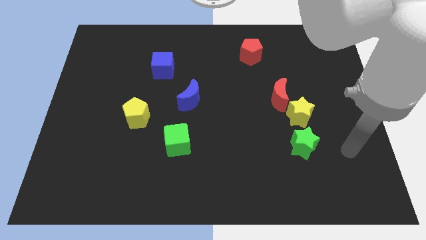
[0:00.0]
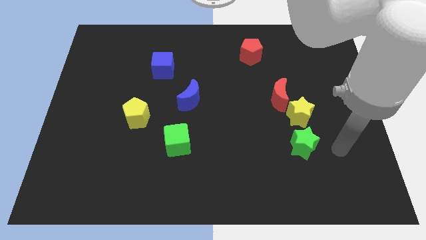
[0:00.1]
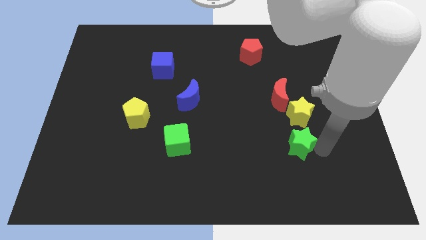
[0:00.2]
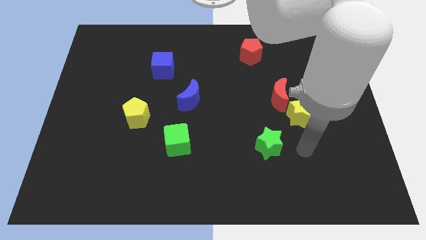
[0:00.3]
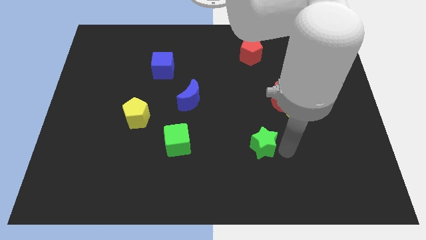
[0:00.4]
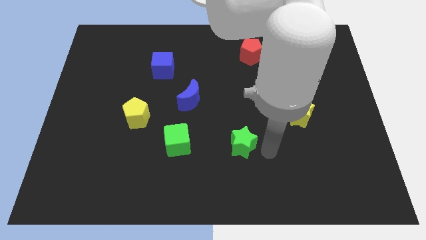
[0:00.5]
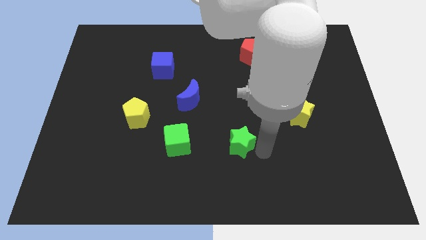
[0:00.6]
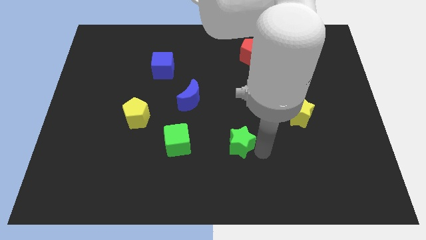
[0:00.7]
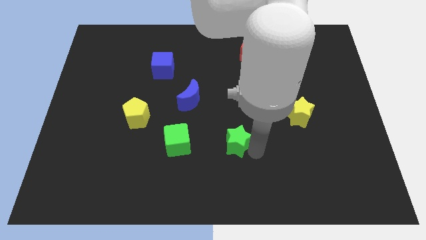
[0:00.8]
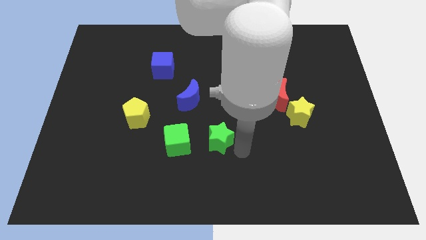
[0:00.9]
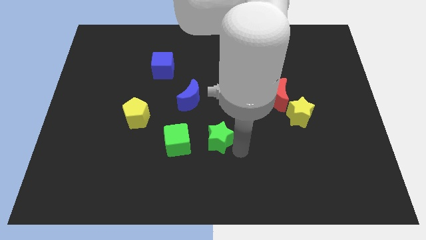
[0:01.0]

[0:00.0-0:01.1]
move the green star right to the green cube

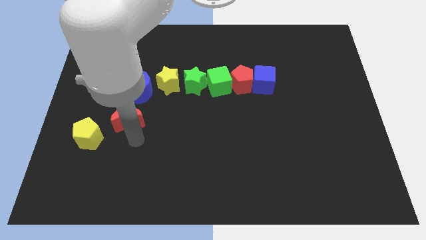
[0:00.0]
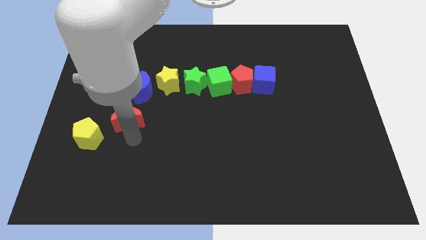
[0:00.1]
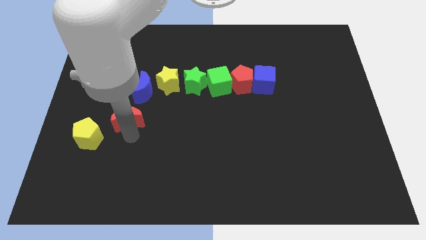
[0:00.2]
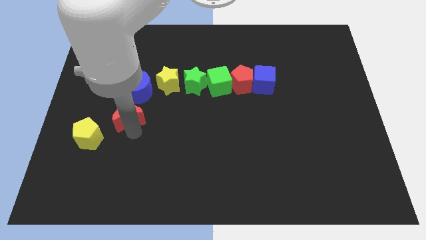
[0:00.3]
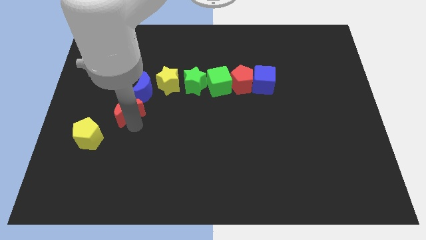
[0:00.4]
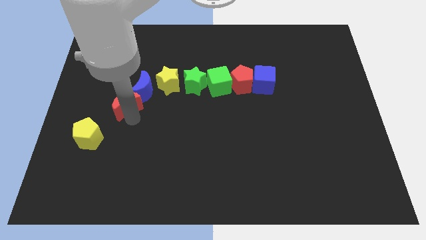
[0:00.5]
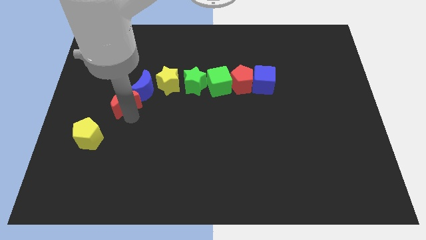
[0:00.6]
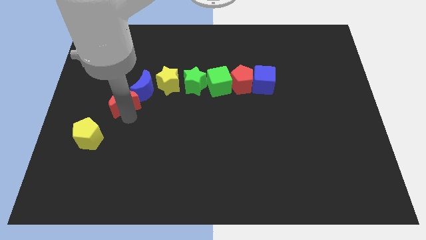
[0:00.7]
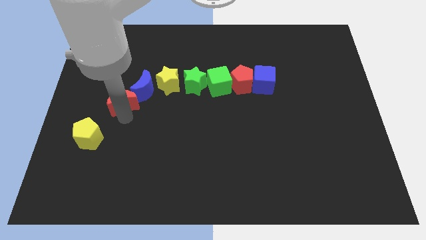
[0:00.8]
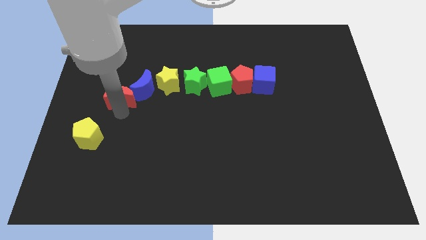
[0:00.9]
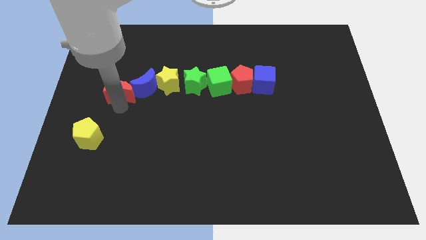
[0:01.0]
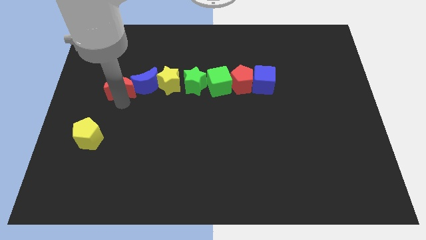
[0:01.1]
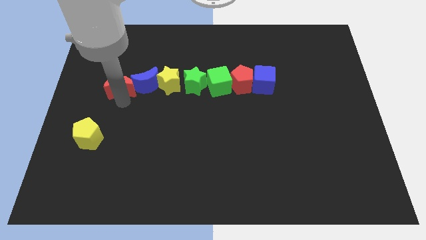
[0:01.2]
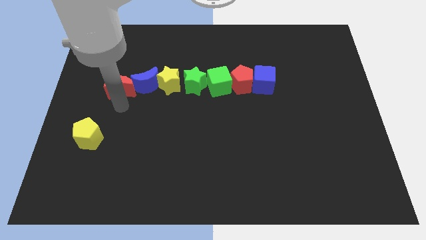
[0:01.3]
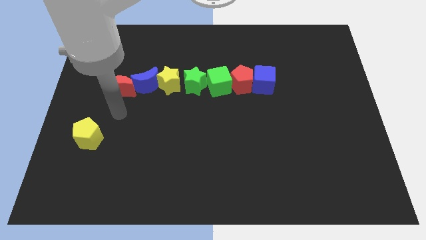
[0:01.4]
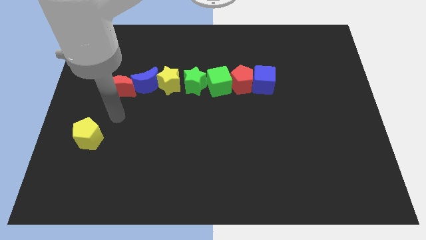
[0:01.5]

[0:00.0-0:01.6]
move red moon into the blue moon

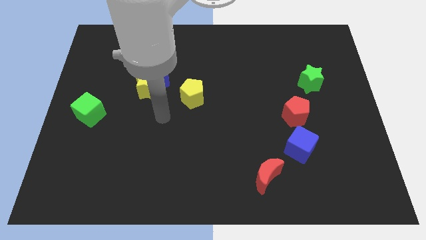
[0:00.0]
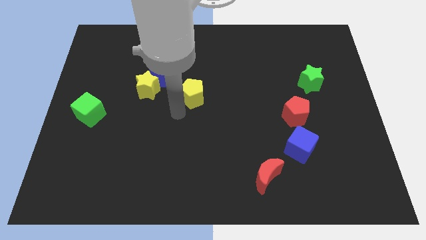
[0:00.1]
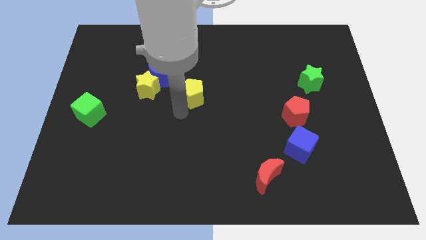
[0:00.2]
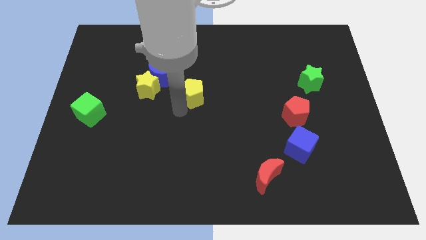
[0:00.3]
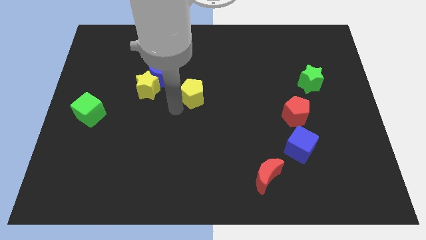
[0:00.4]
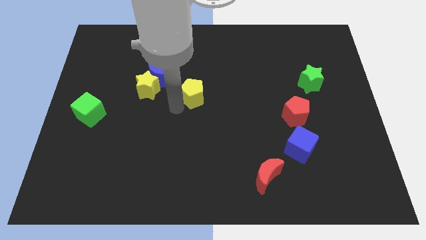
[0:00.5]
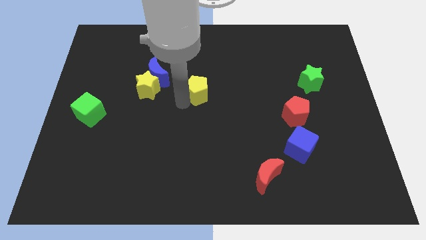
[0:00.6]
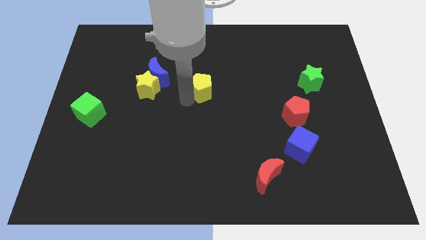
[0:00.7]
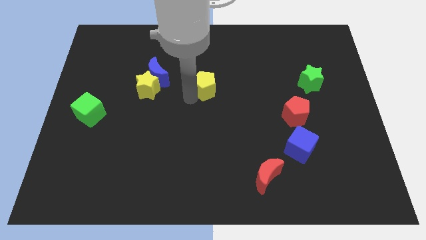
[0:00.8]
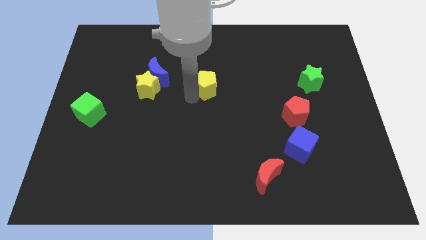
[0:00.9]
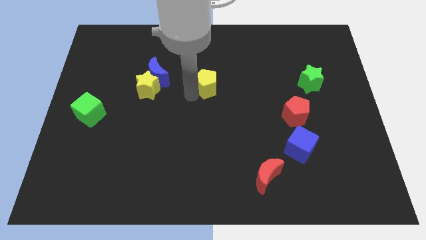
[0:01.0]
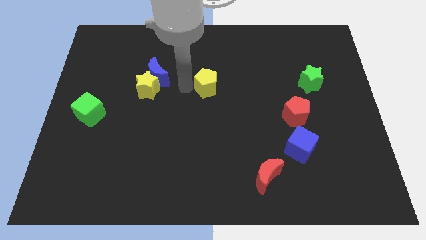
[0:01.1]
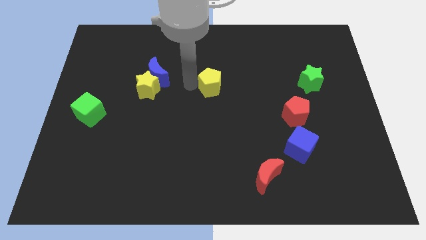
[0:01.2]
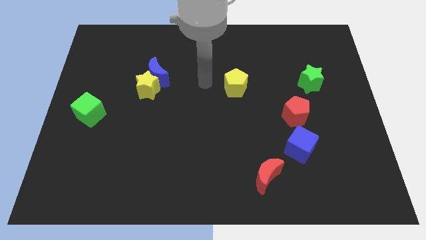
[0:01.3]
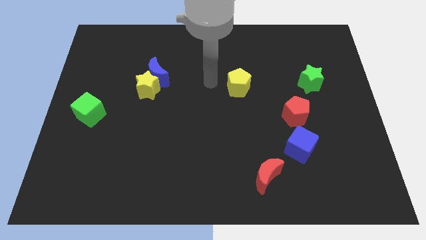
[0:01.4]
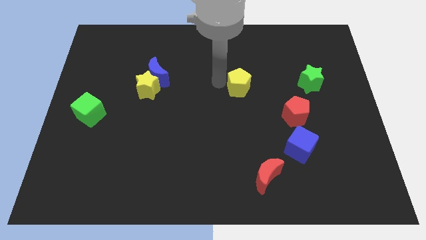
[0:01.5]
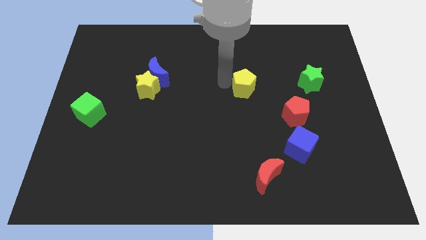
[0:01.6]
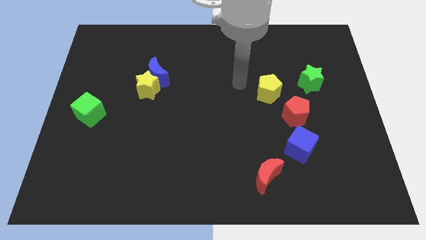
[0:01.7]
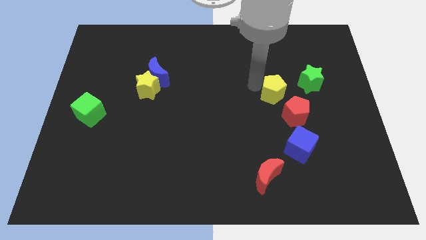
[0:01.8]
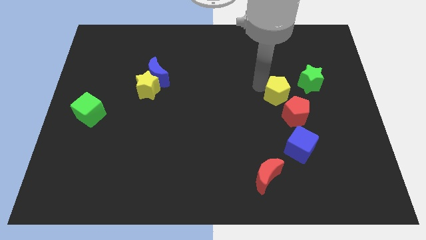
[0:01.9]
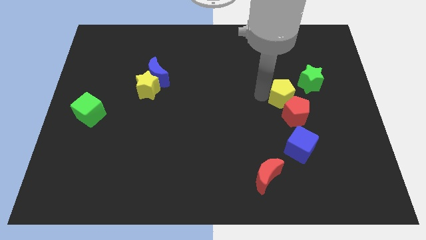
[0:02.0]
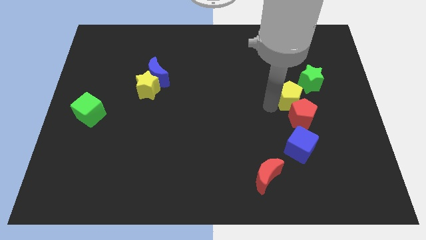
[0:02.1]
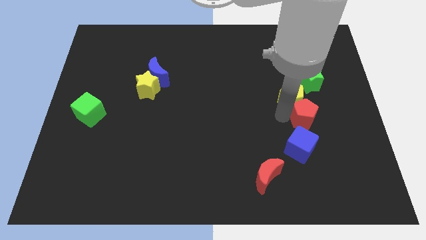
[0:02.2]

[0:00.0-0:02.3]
push the yellow pentagon into the red pentagon

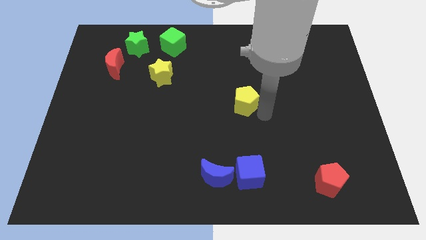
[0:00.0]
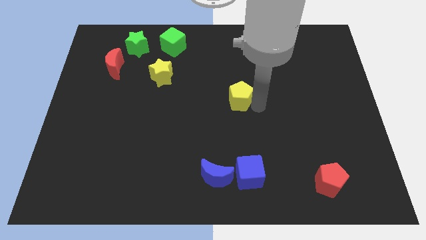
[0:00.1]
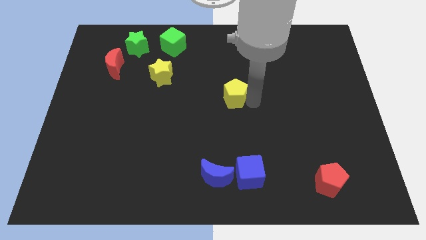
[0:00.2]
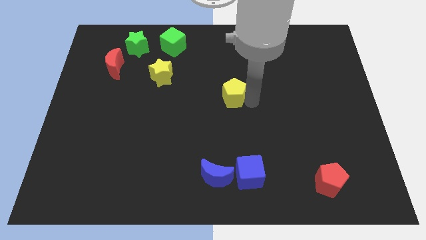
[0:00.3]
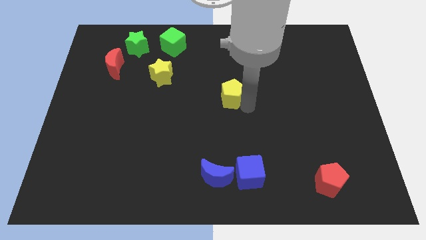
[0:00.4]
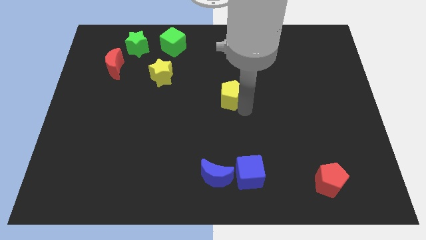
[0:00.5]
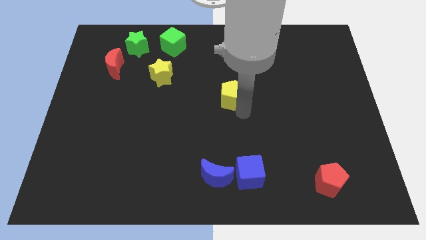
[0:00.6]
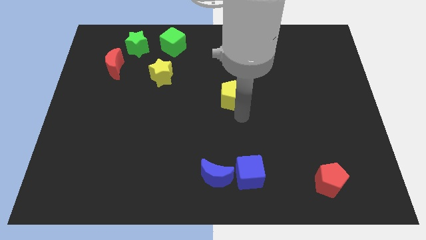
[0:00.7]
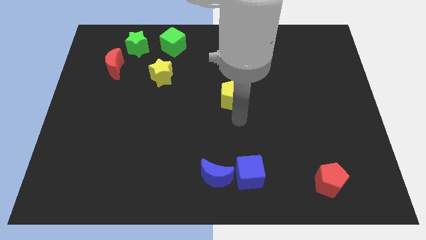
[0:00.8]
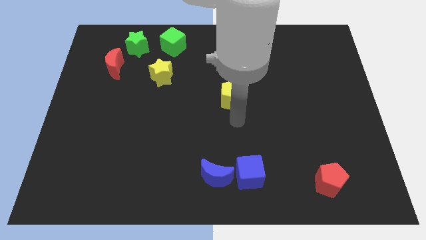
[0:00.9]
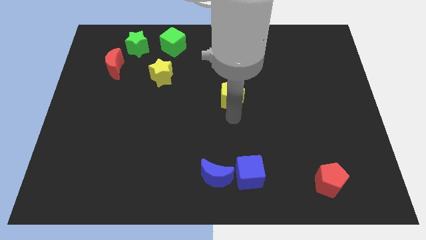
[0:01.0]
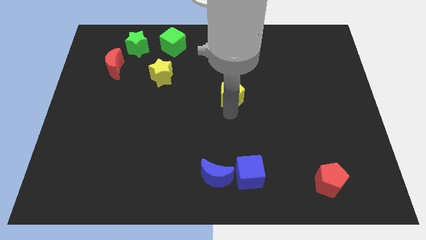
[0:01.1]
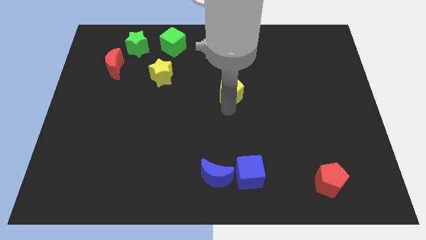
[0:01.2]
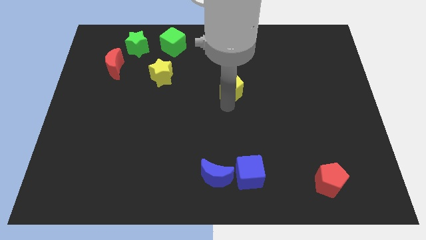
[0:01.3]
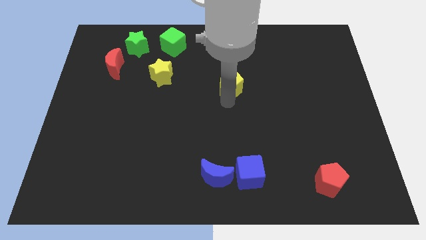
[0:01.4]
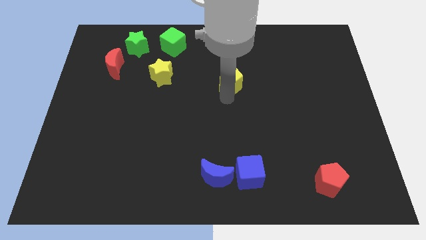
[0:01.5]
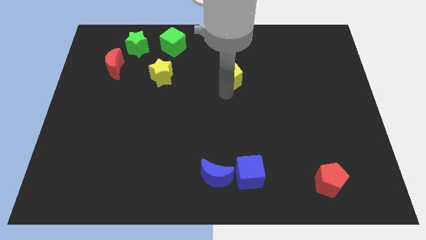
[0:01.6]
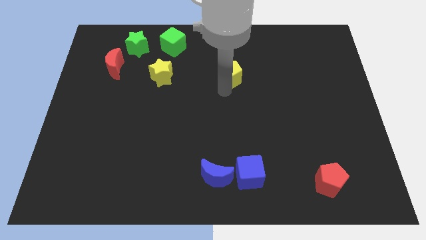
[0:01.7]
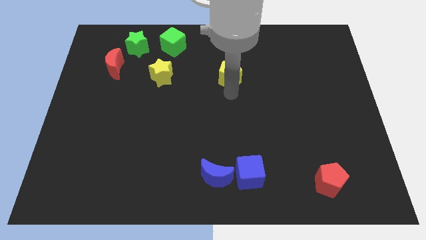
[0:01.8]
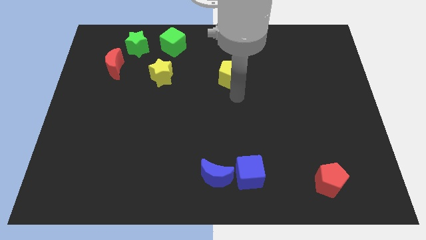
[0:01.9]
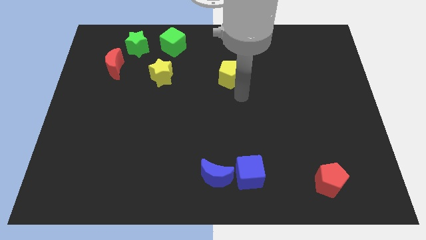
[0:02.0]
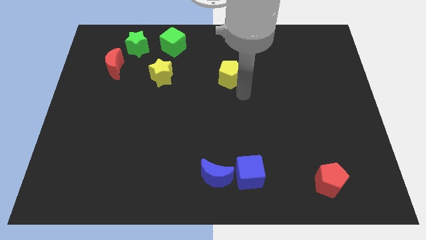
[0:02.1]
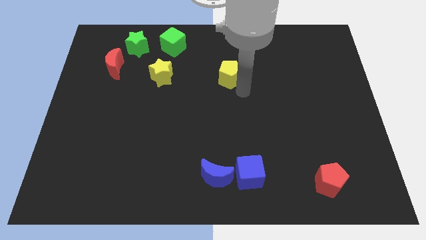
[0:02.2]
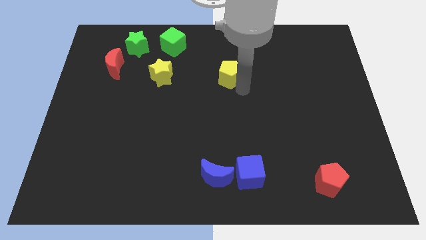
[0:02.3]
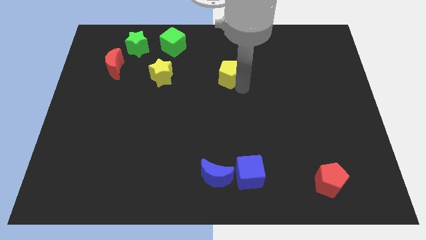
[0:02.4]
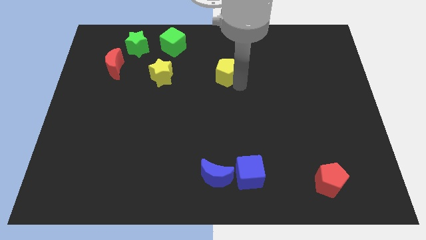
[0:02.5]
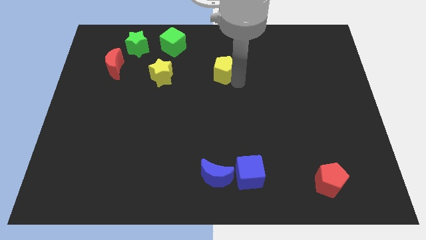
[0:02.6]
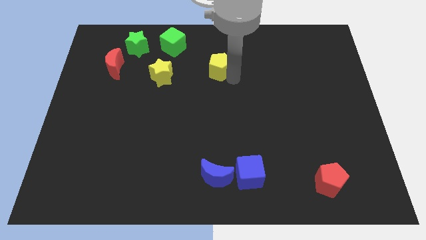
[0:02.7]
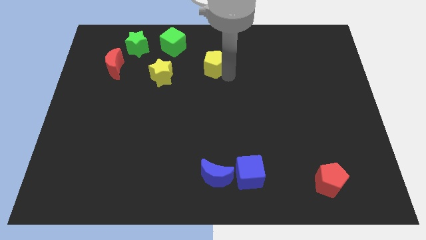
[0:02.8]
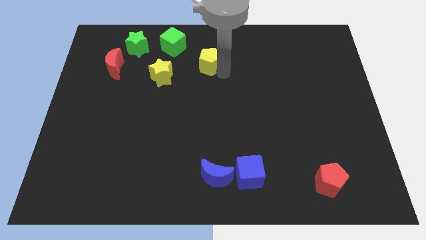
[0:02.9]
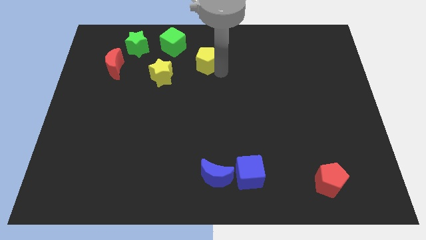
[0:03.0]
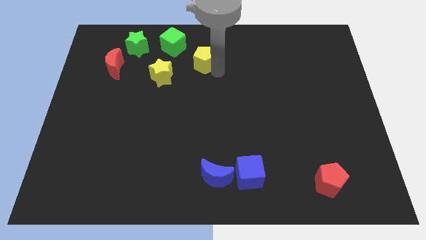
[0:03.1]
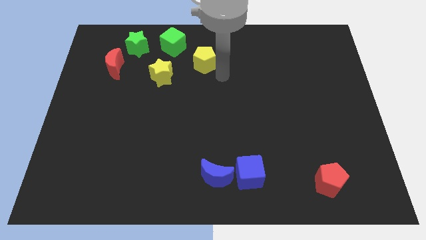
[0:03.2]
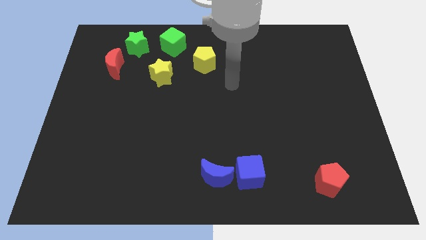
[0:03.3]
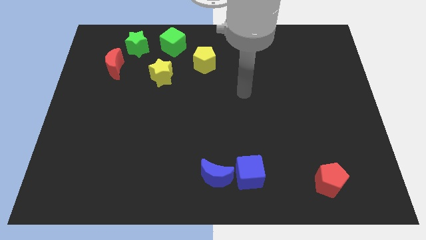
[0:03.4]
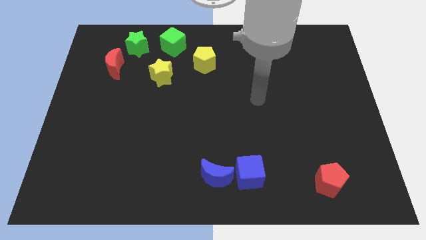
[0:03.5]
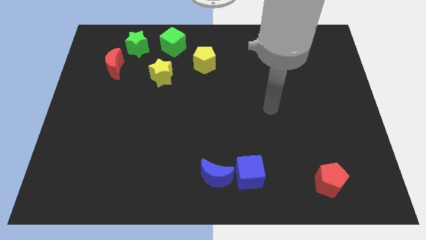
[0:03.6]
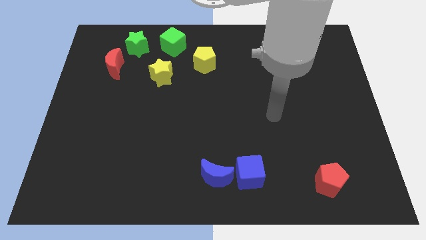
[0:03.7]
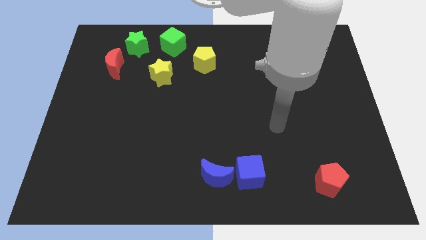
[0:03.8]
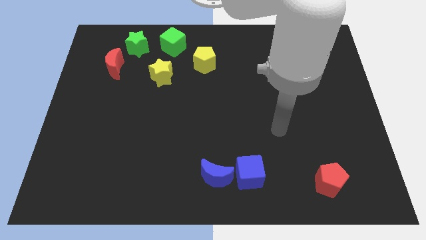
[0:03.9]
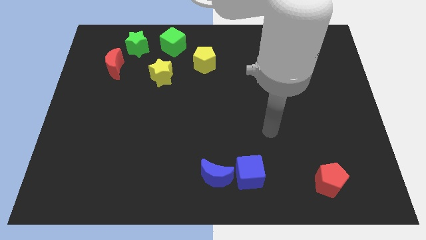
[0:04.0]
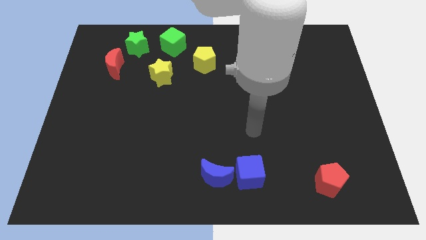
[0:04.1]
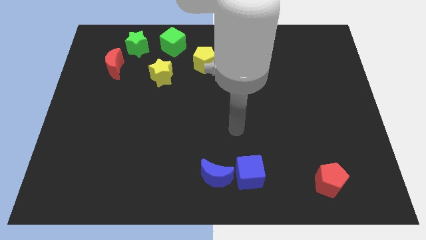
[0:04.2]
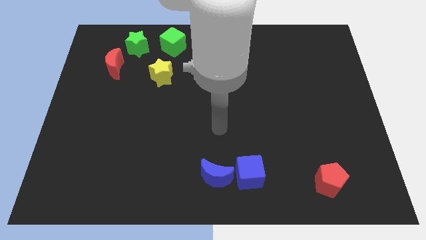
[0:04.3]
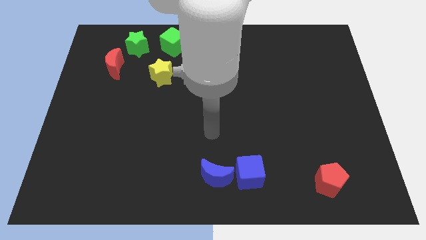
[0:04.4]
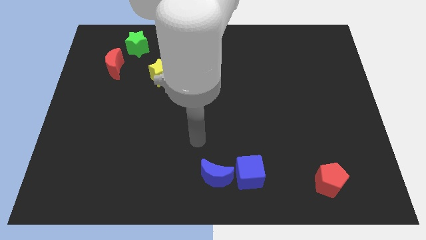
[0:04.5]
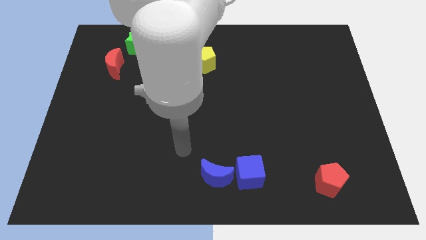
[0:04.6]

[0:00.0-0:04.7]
move the yellow pentagon to the top left of the board
